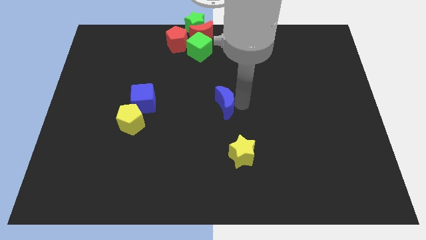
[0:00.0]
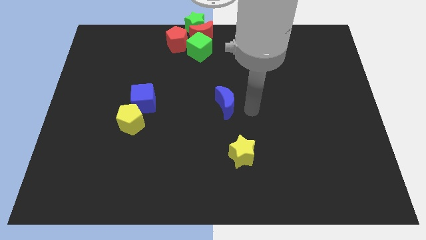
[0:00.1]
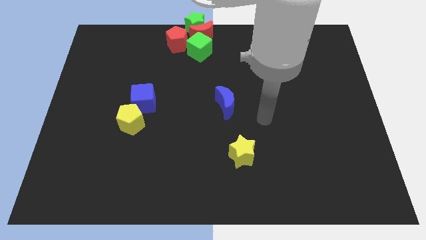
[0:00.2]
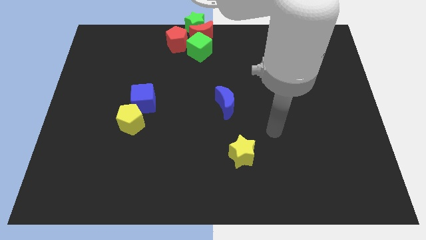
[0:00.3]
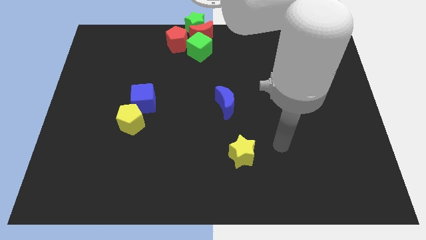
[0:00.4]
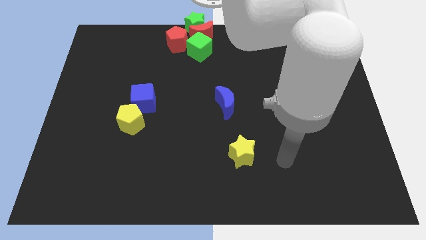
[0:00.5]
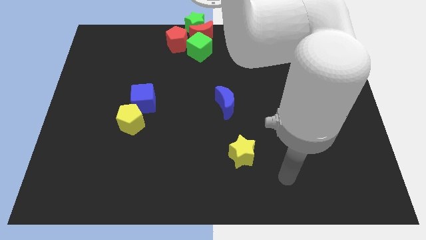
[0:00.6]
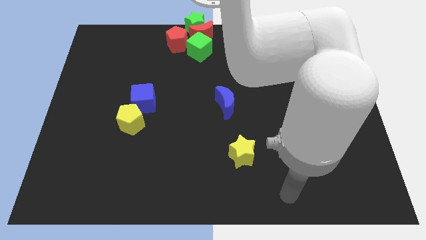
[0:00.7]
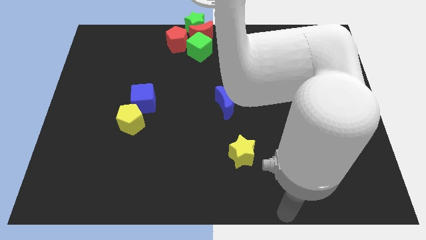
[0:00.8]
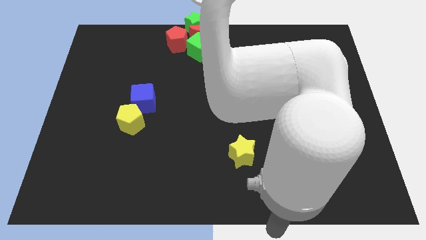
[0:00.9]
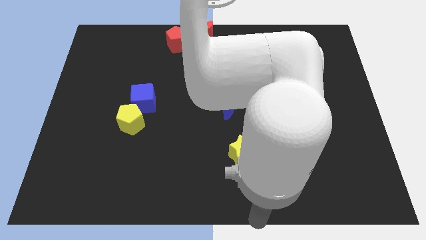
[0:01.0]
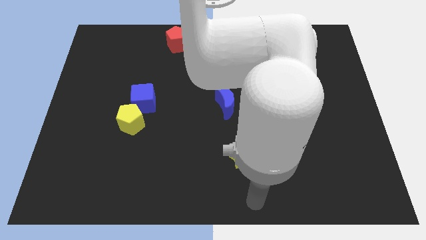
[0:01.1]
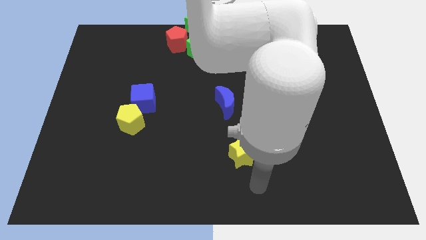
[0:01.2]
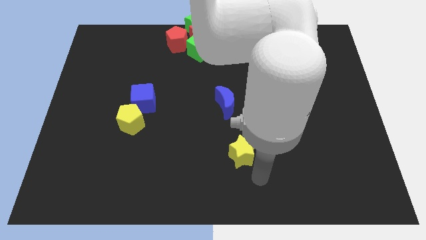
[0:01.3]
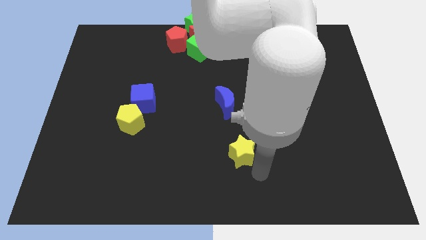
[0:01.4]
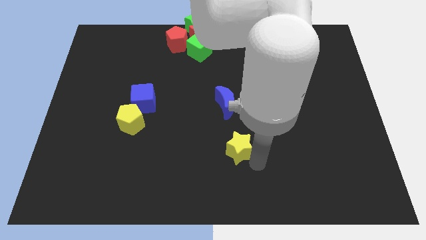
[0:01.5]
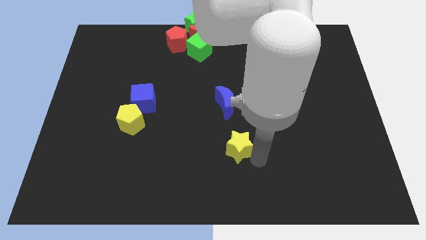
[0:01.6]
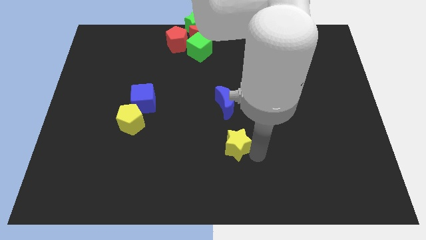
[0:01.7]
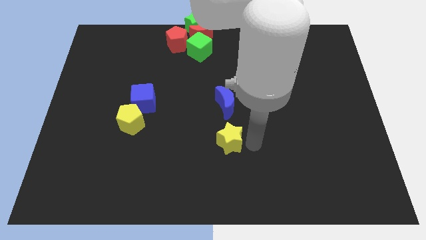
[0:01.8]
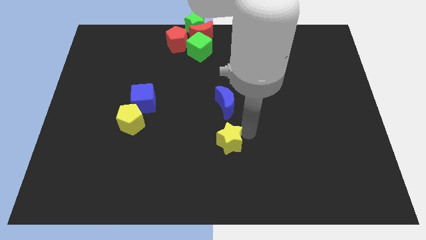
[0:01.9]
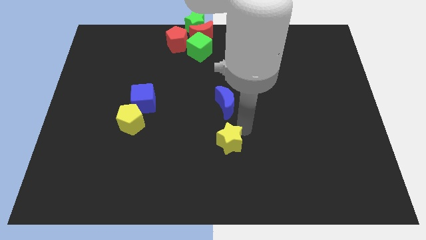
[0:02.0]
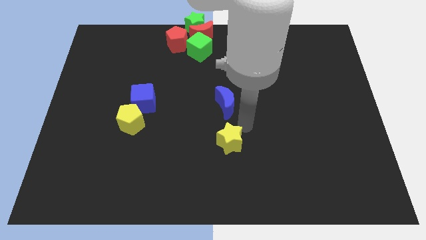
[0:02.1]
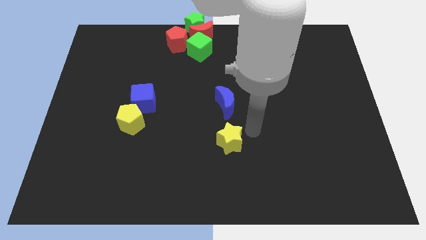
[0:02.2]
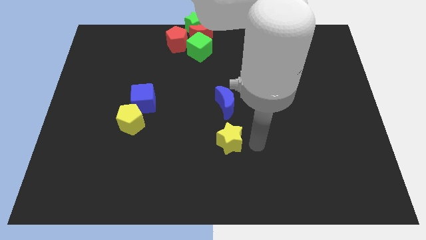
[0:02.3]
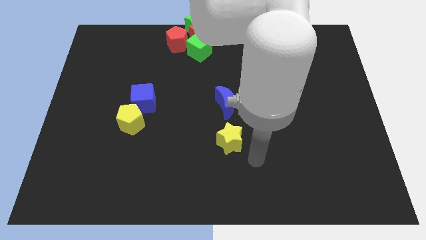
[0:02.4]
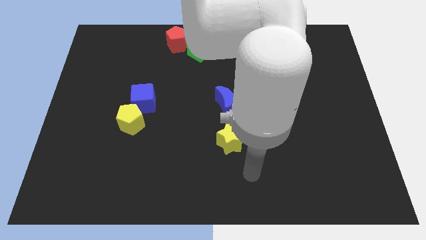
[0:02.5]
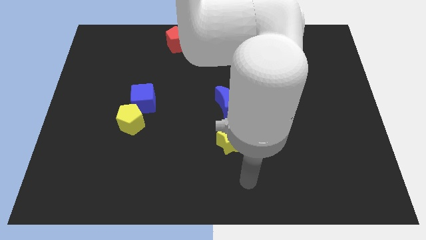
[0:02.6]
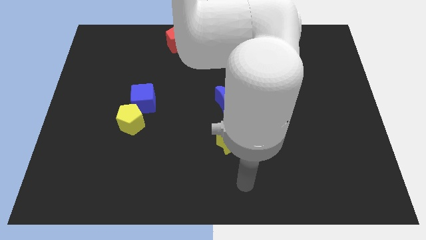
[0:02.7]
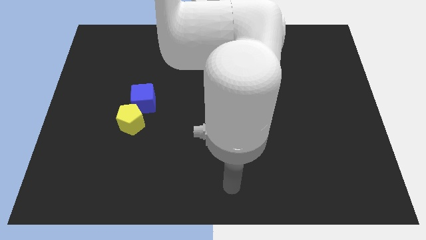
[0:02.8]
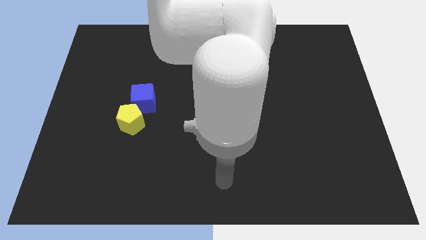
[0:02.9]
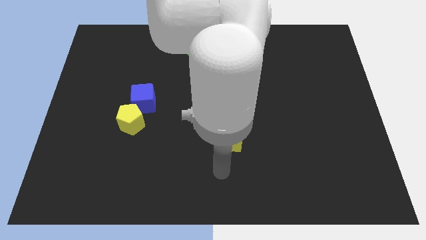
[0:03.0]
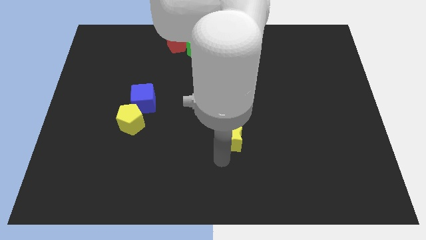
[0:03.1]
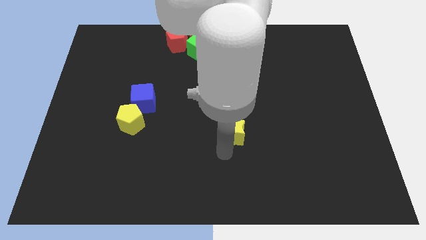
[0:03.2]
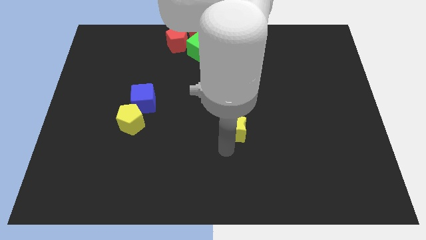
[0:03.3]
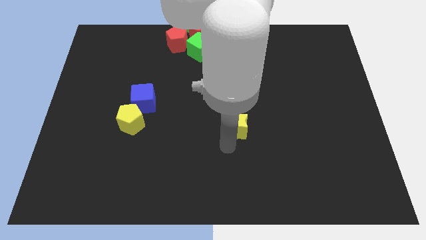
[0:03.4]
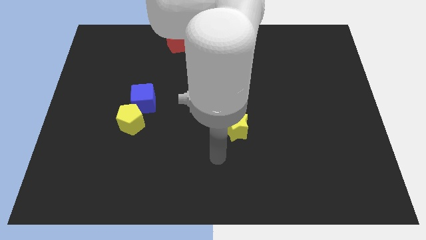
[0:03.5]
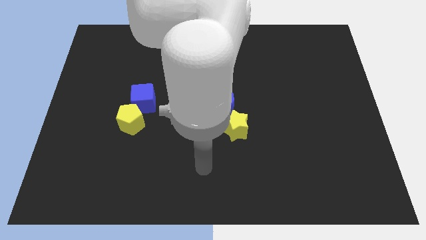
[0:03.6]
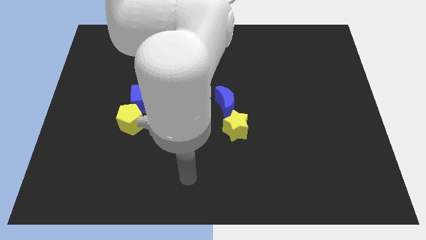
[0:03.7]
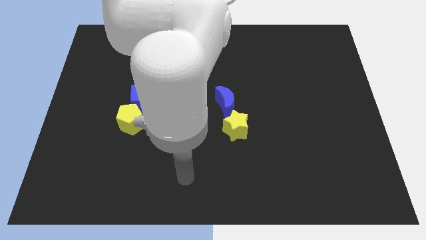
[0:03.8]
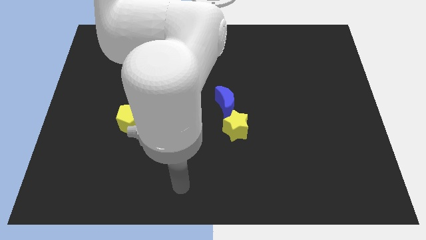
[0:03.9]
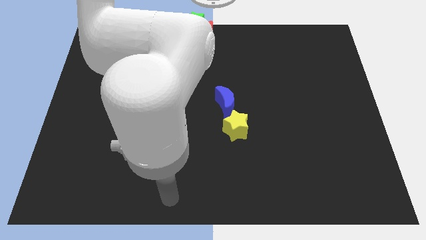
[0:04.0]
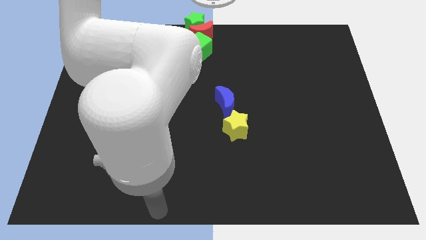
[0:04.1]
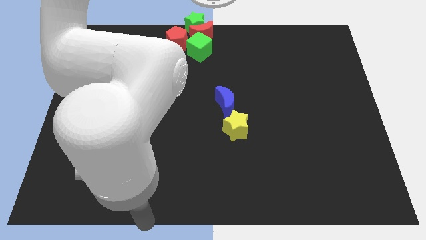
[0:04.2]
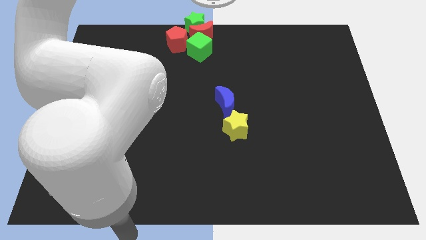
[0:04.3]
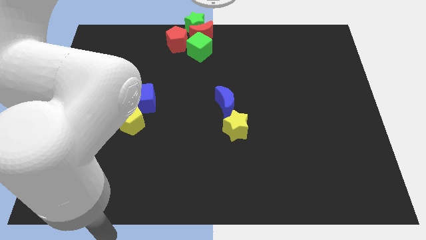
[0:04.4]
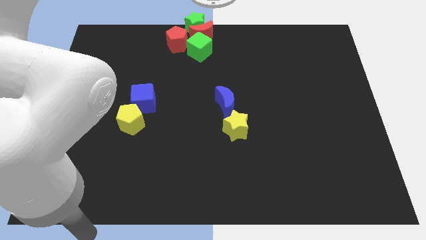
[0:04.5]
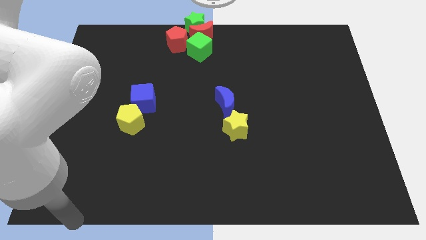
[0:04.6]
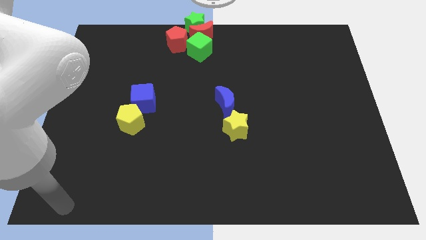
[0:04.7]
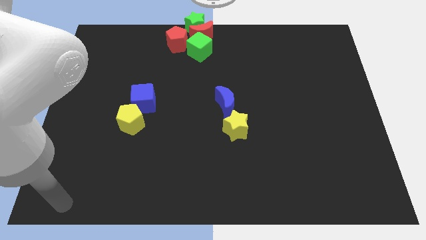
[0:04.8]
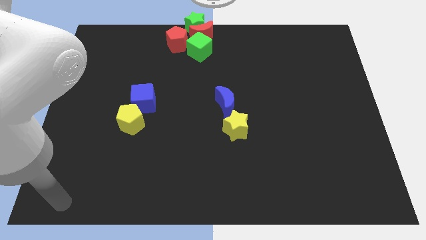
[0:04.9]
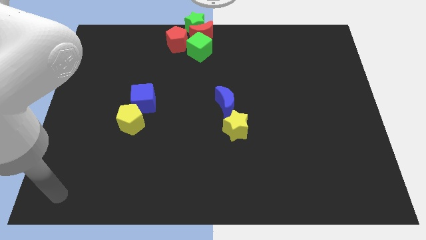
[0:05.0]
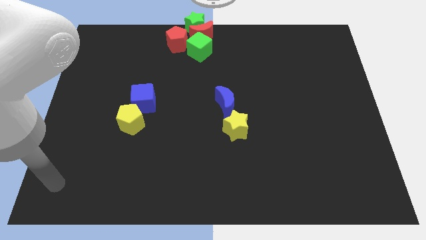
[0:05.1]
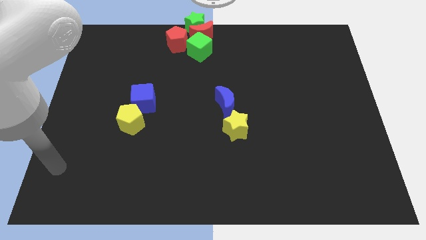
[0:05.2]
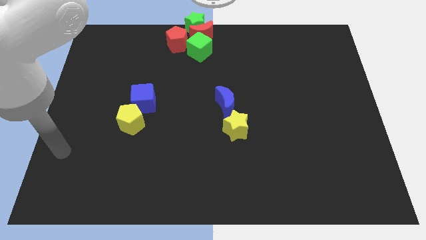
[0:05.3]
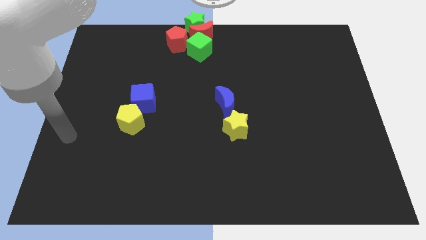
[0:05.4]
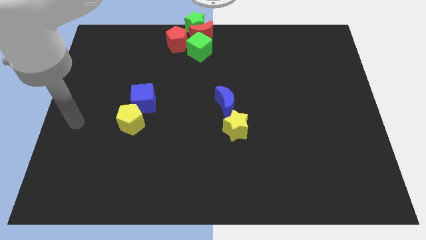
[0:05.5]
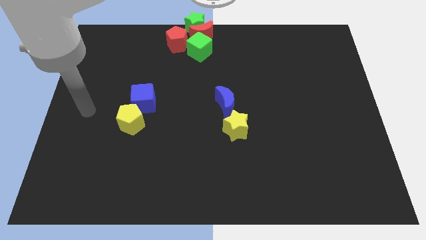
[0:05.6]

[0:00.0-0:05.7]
move yellow star slightly up

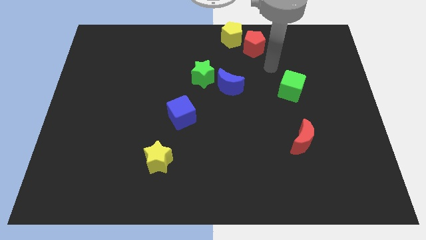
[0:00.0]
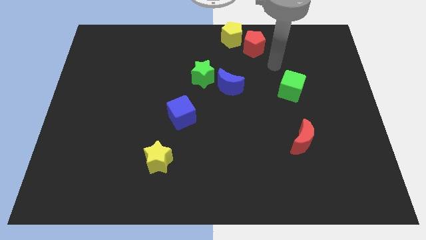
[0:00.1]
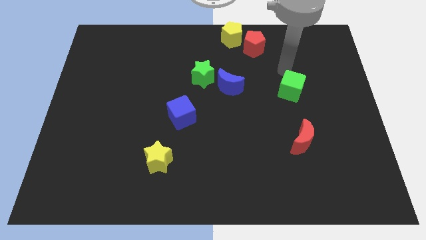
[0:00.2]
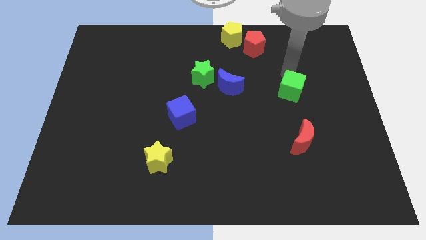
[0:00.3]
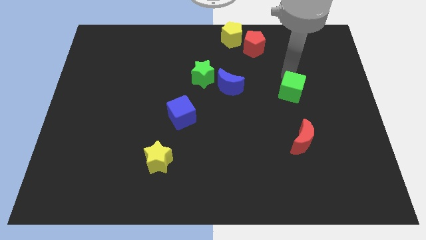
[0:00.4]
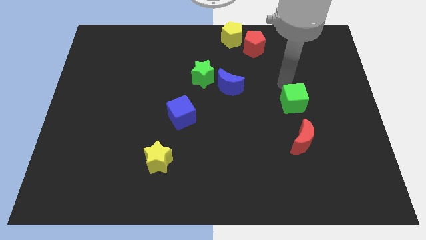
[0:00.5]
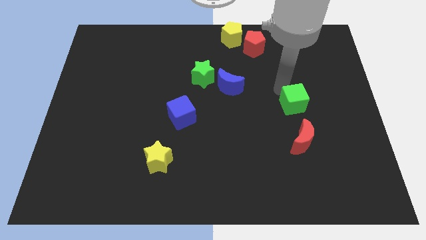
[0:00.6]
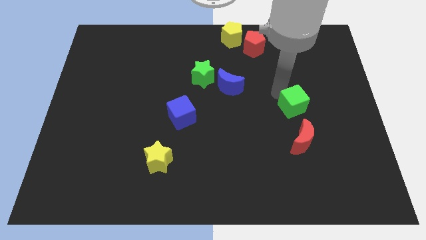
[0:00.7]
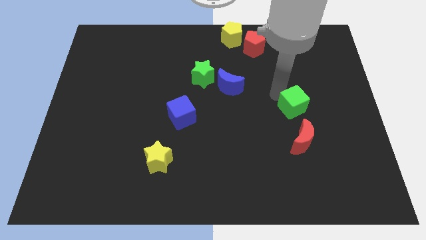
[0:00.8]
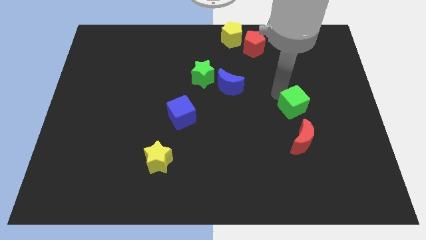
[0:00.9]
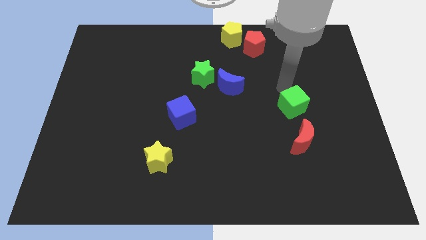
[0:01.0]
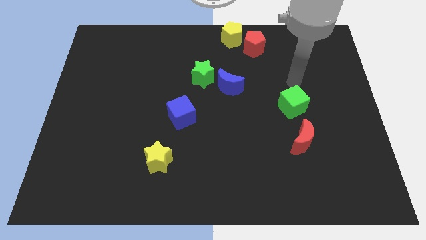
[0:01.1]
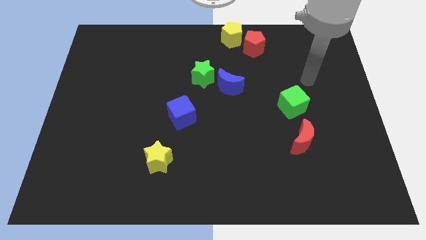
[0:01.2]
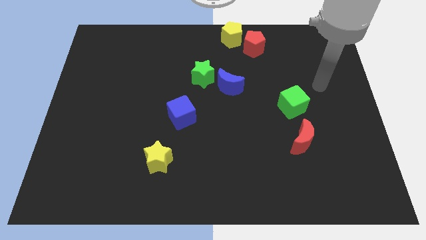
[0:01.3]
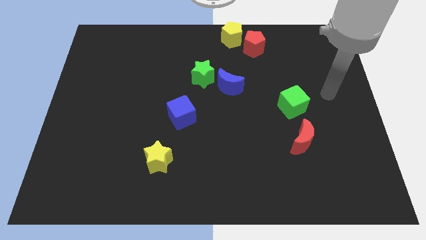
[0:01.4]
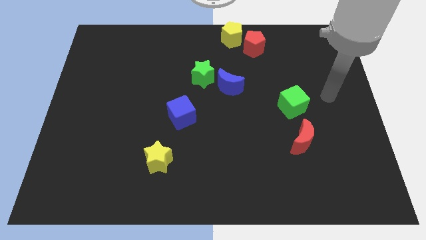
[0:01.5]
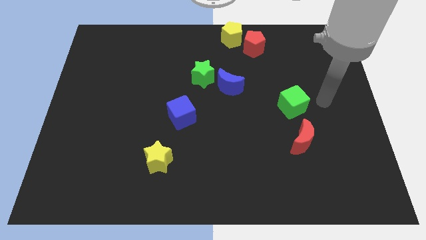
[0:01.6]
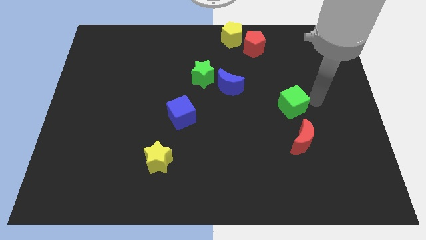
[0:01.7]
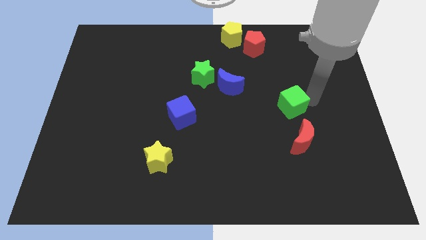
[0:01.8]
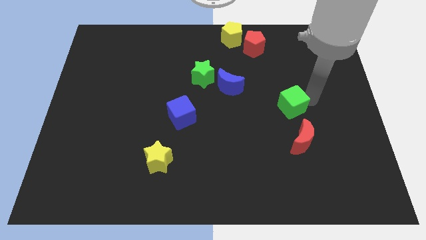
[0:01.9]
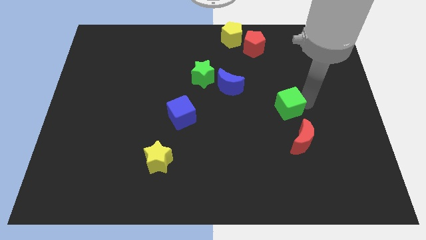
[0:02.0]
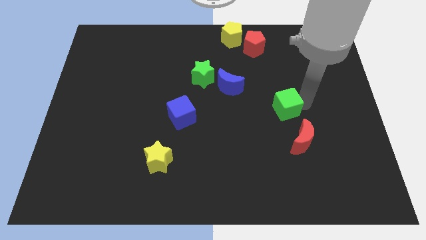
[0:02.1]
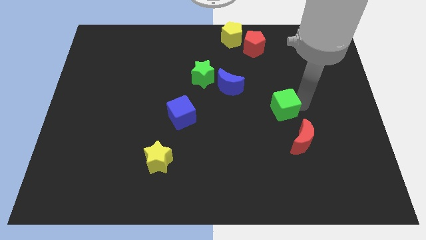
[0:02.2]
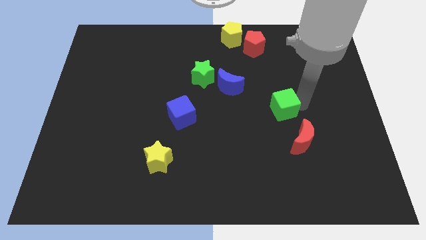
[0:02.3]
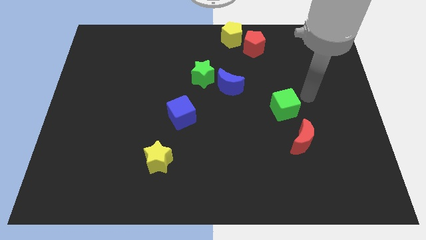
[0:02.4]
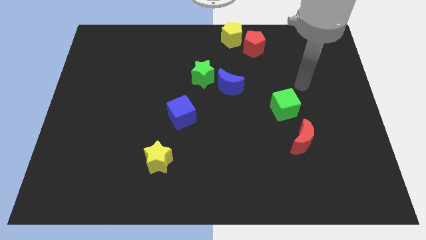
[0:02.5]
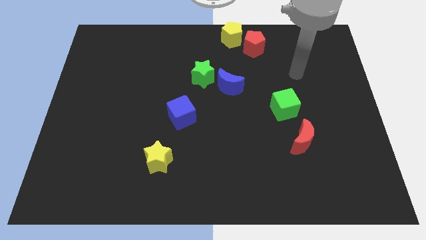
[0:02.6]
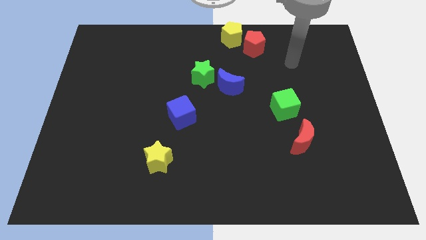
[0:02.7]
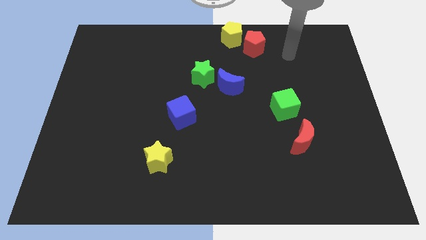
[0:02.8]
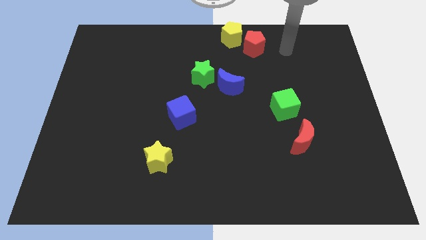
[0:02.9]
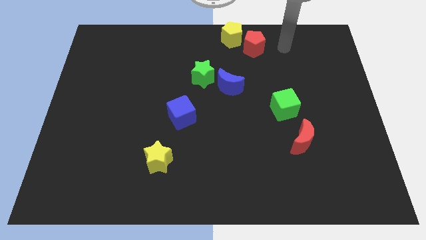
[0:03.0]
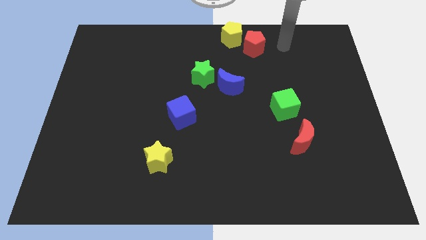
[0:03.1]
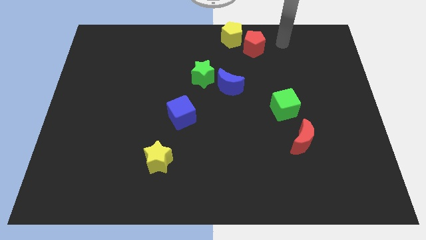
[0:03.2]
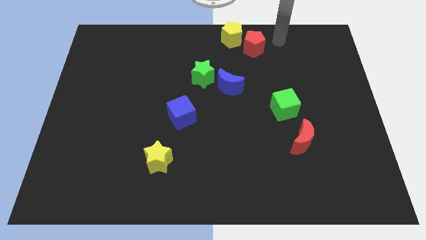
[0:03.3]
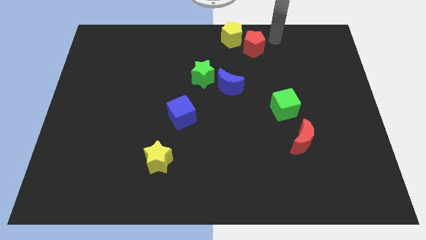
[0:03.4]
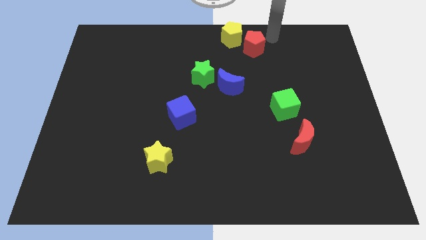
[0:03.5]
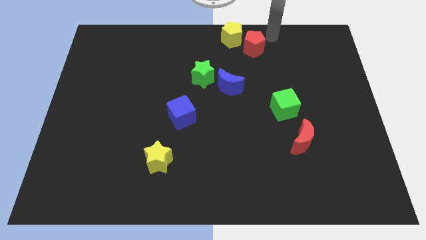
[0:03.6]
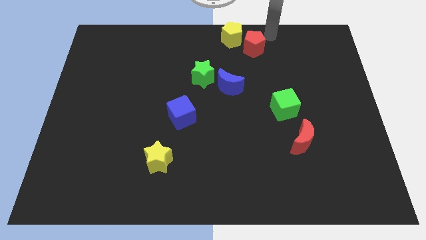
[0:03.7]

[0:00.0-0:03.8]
move the green cube diagonally bottom right to the blue moon
